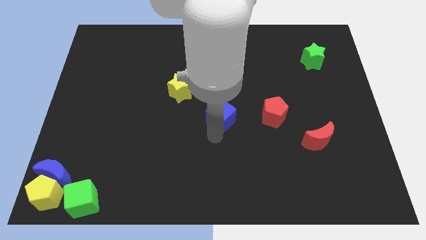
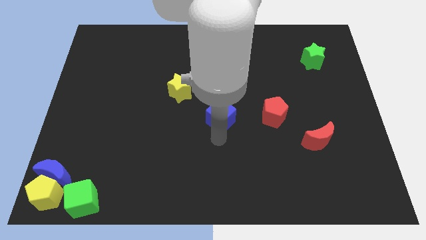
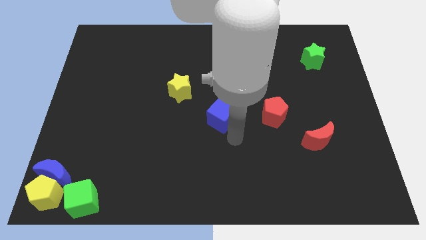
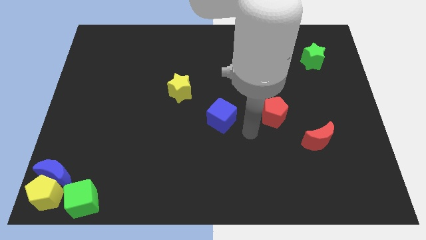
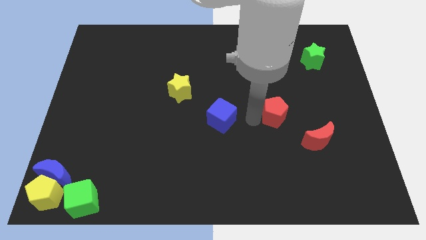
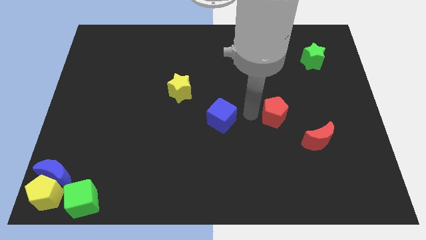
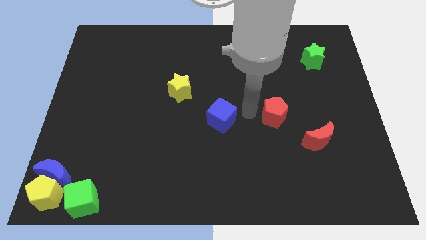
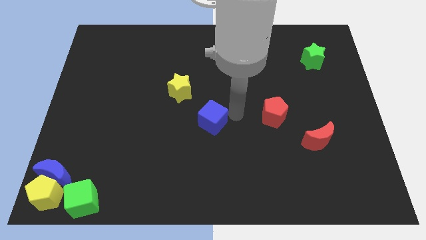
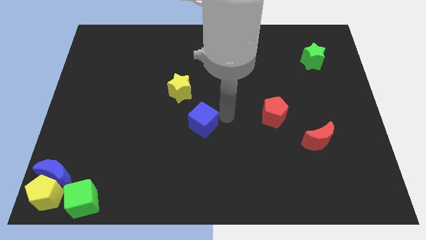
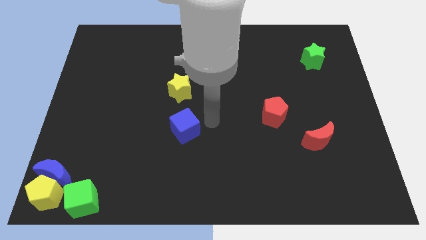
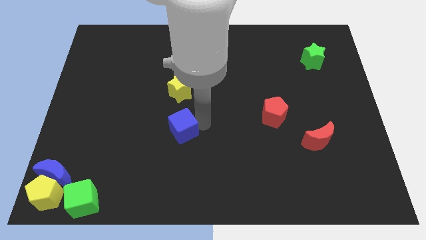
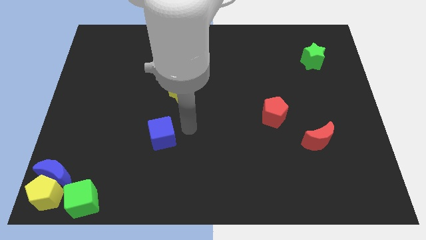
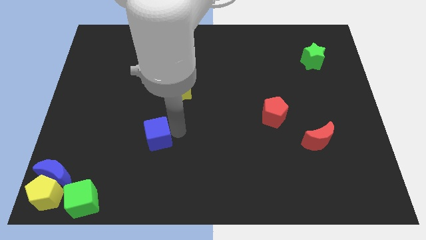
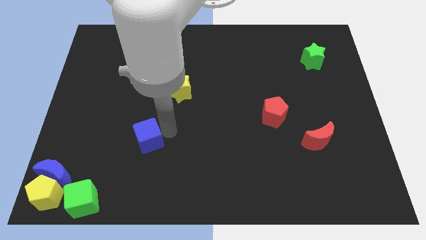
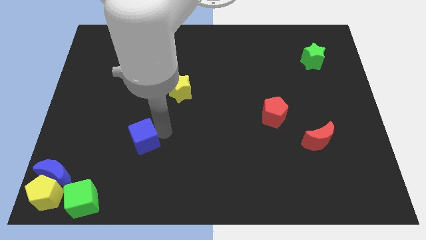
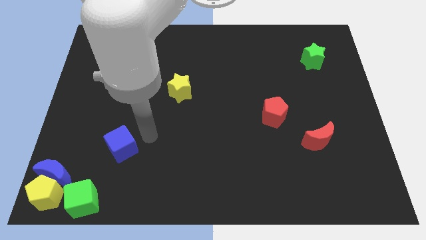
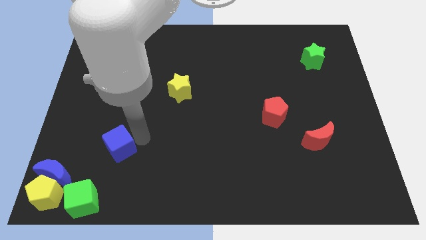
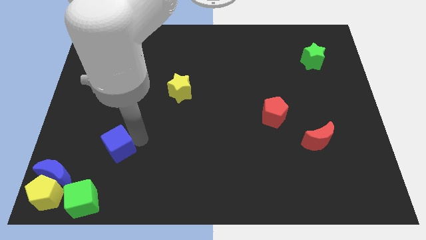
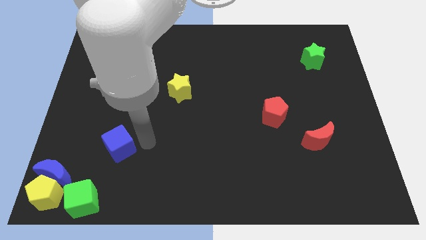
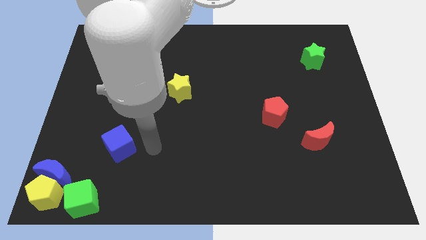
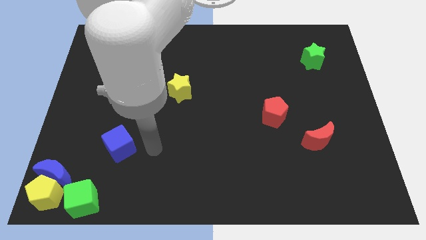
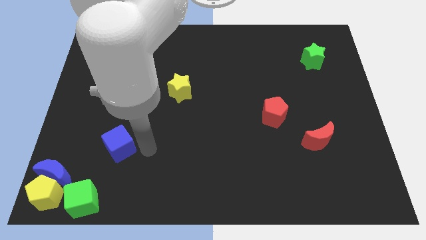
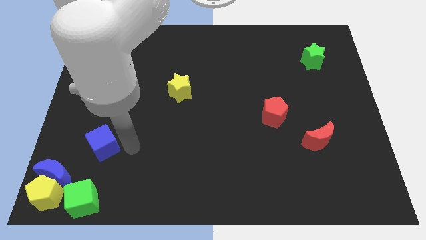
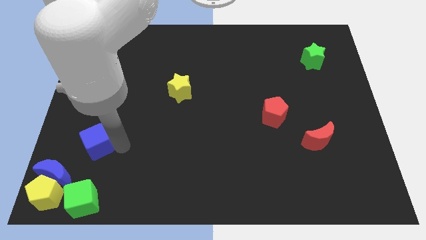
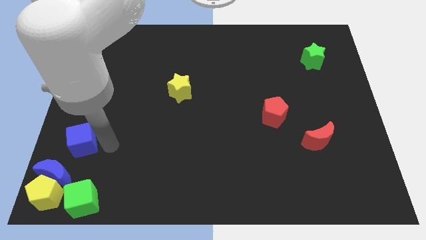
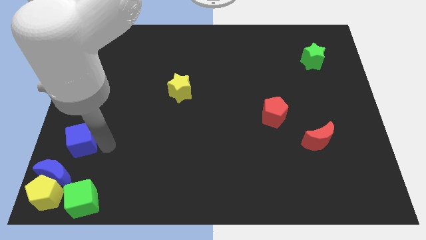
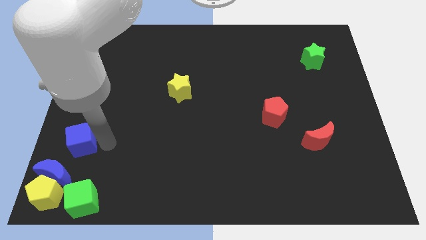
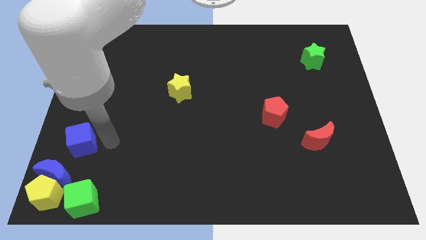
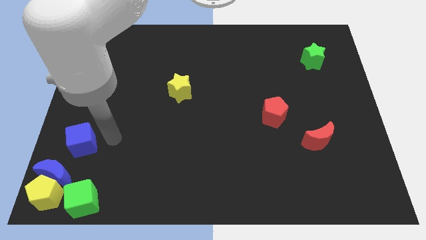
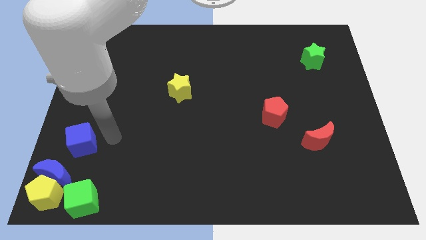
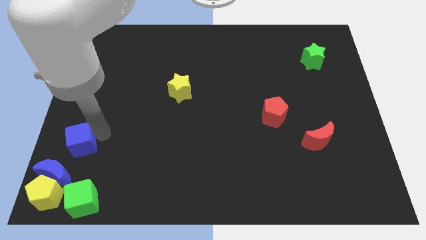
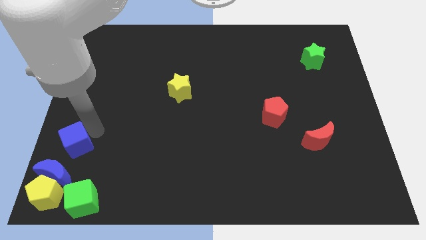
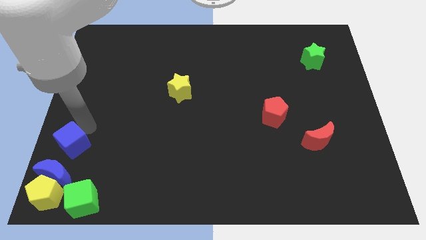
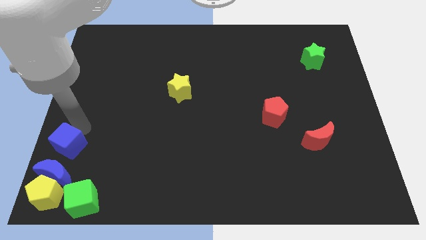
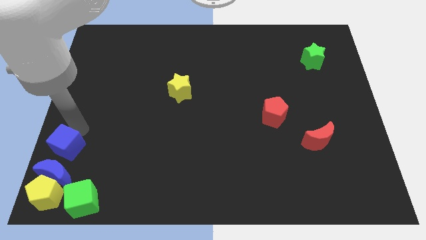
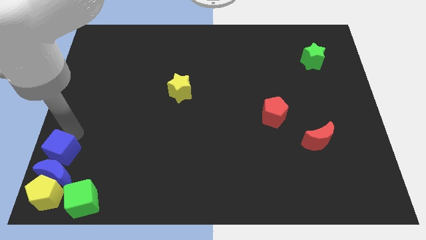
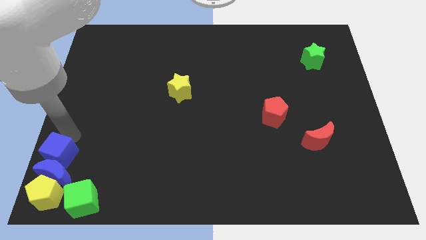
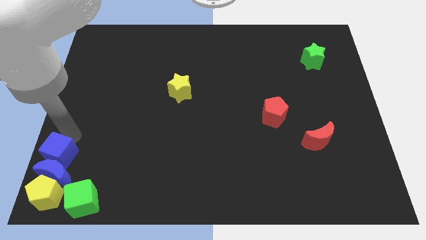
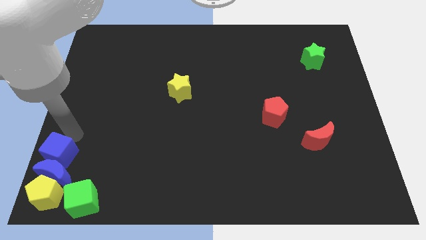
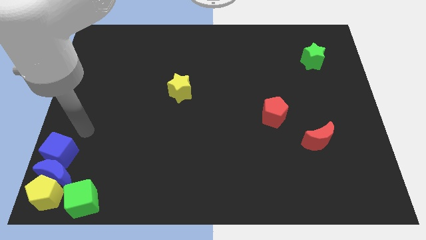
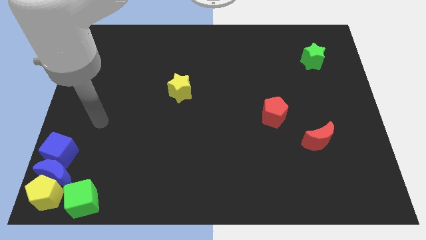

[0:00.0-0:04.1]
add blue cube into blue moon

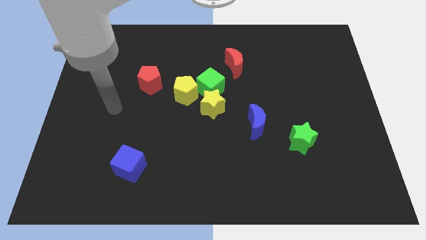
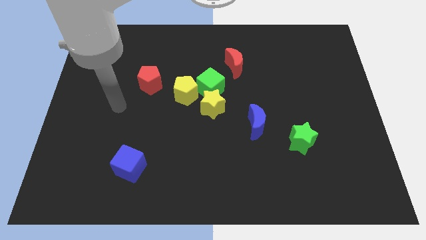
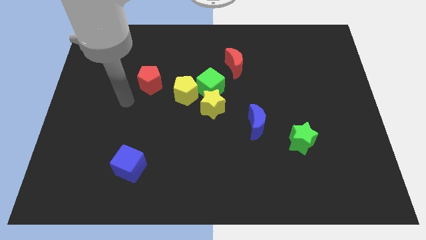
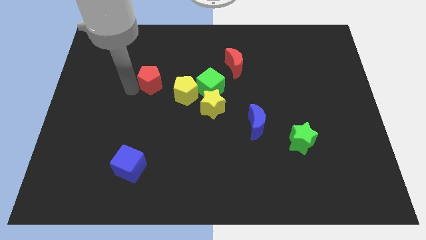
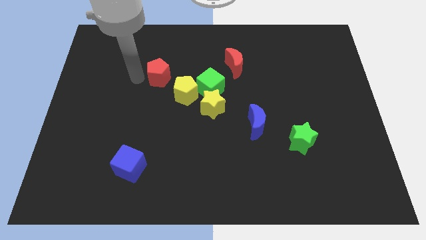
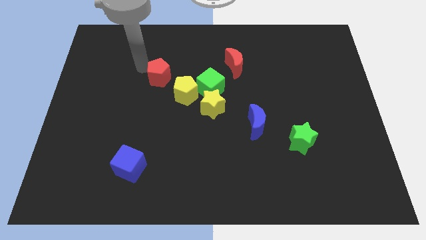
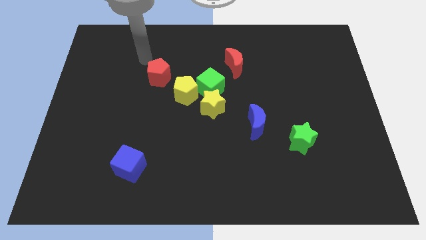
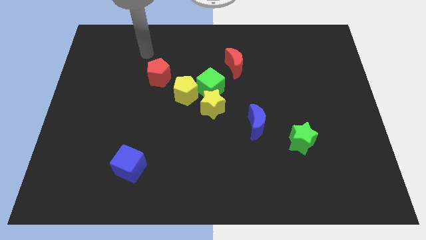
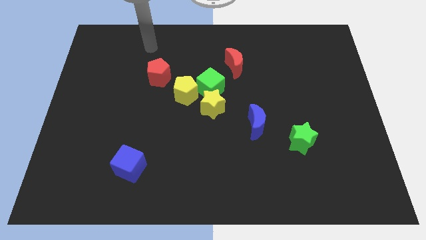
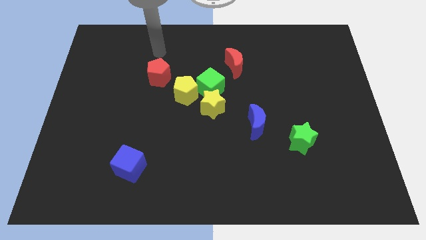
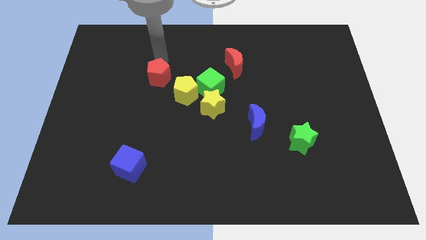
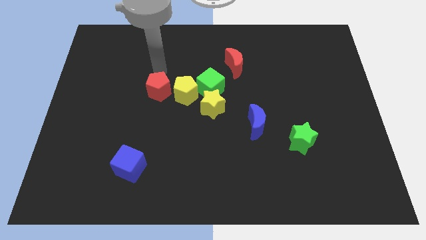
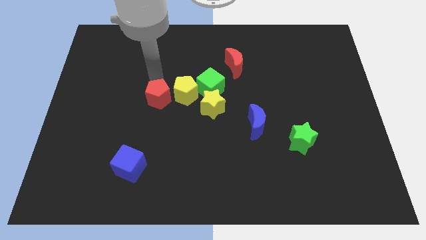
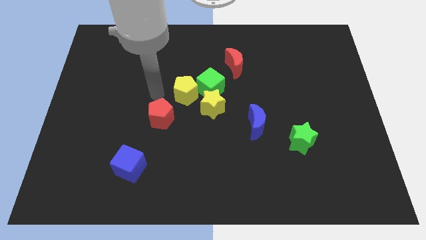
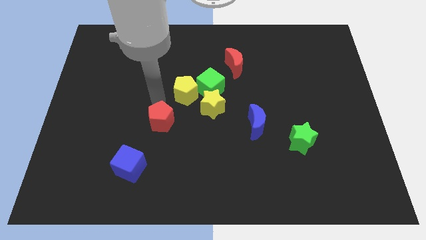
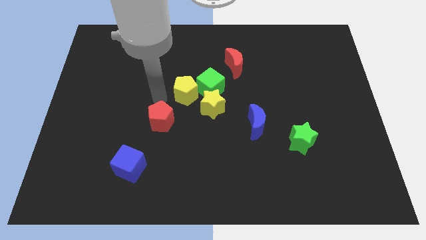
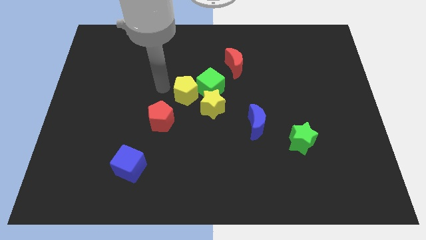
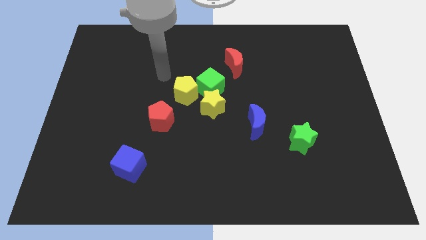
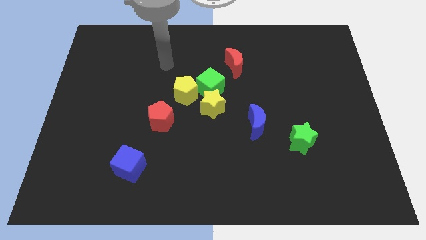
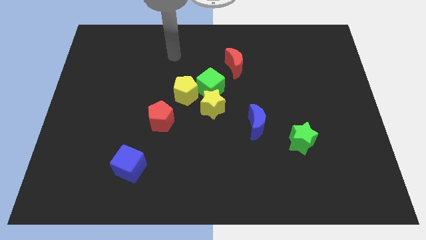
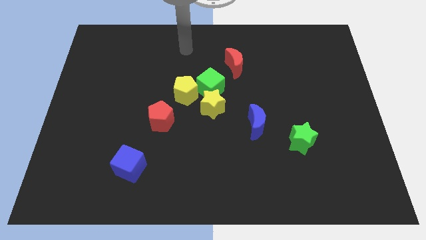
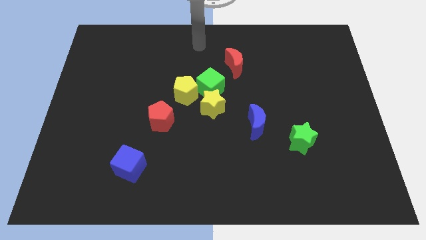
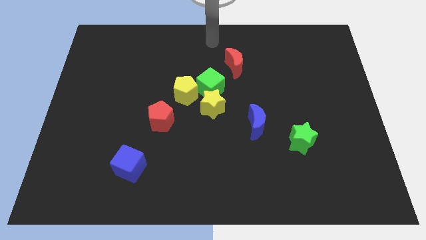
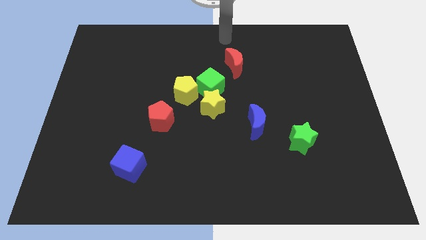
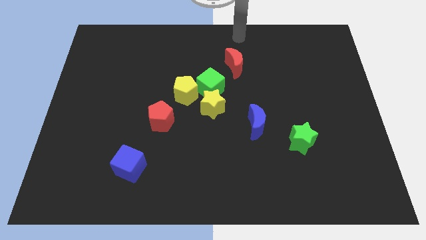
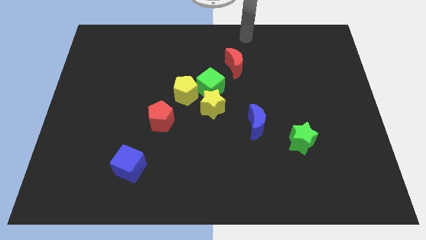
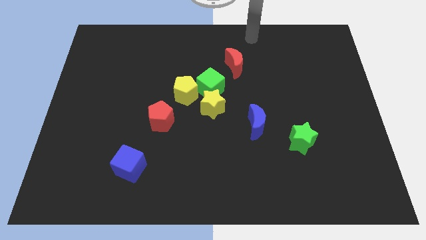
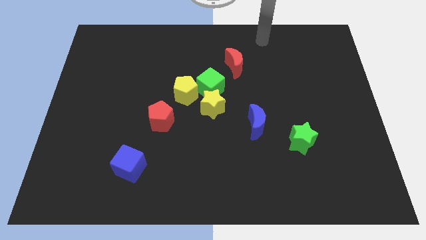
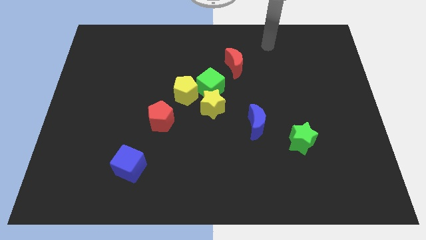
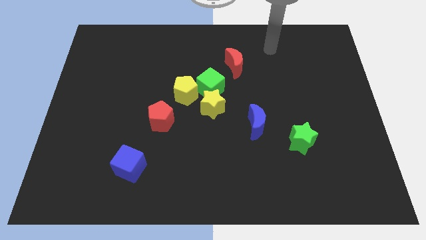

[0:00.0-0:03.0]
move the arm towards top center

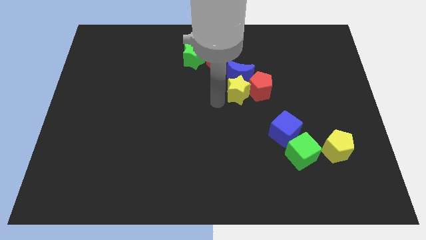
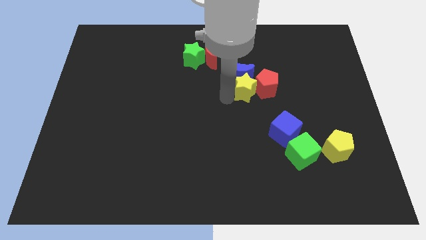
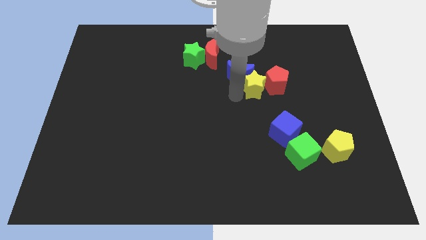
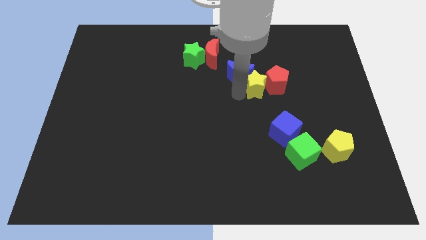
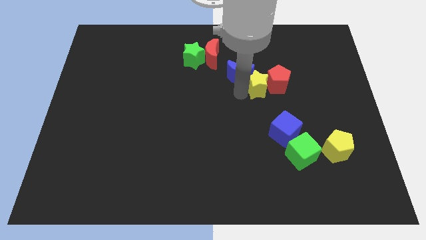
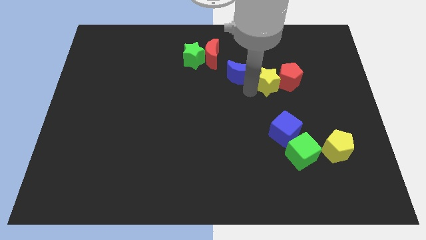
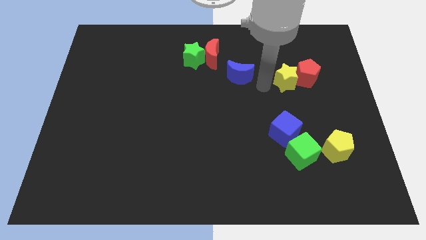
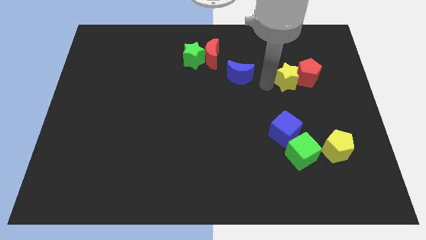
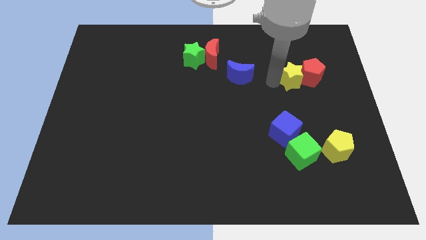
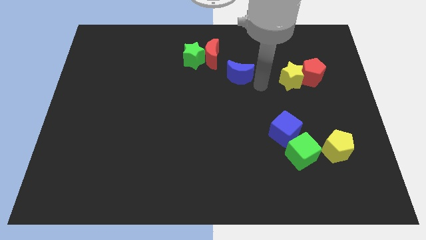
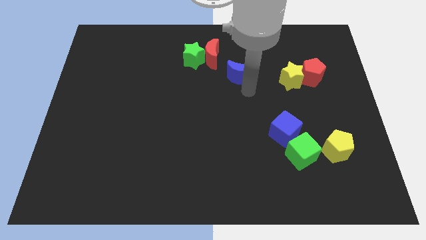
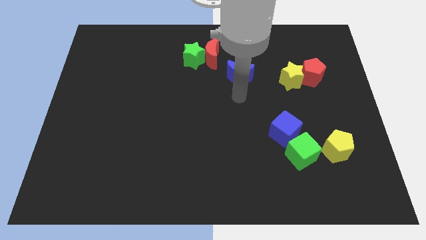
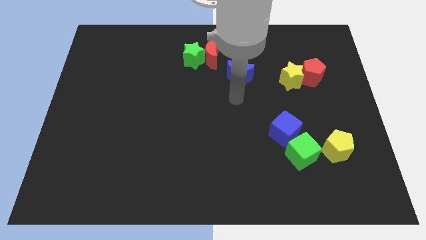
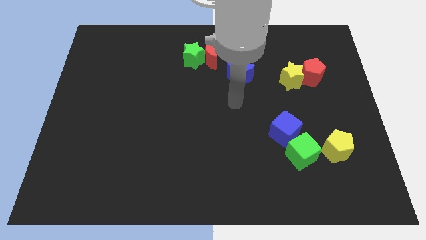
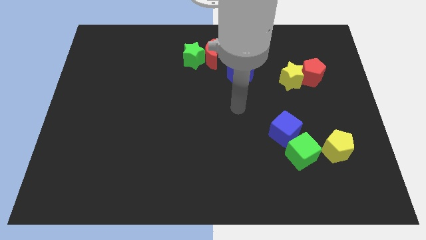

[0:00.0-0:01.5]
move yellow star and red pentagon to the center right

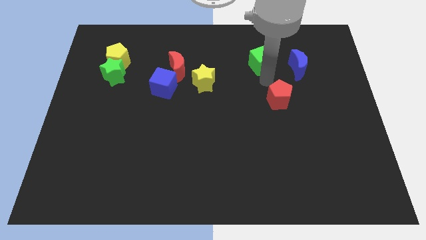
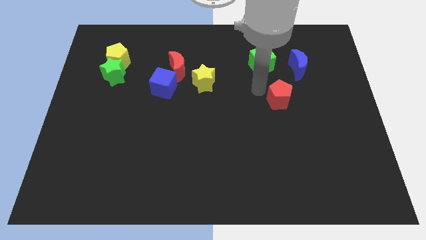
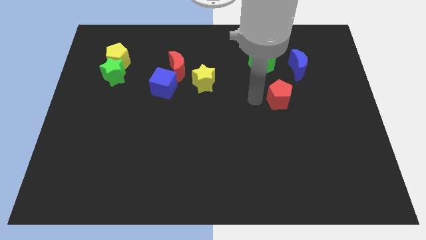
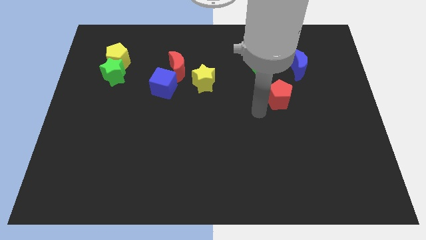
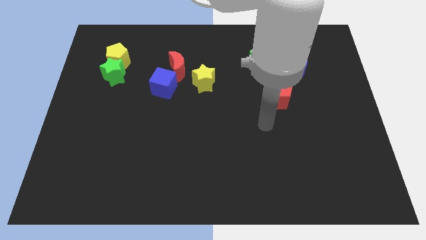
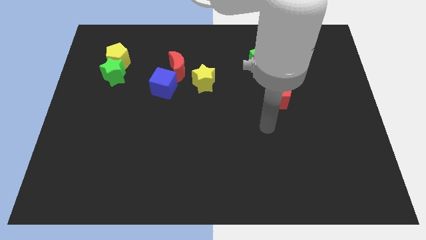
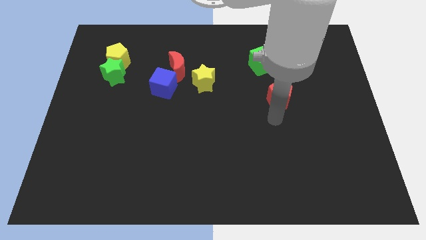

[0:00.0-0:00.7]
move your arm below the red pentagon
